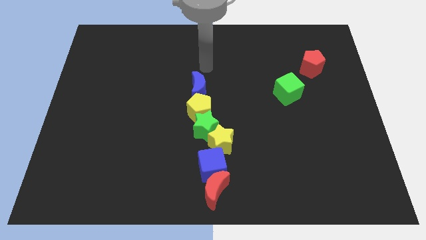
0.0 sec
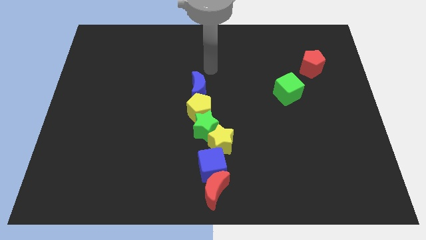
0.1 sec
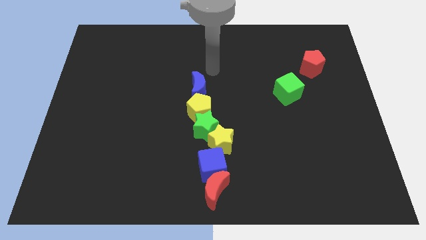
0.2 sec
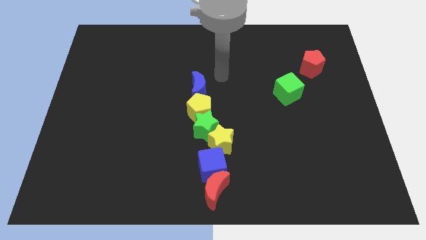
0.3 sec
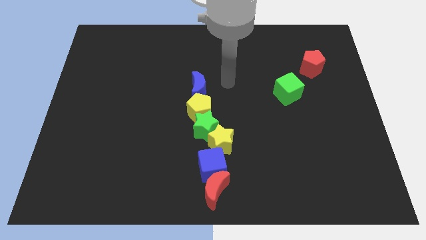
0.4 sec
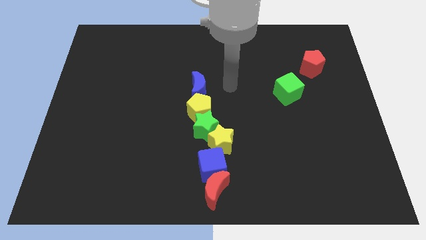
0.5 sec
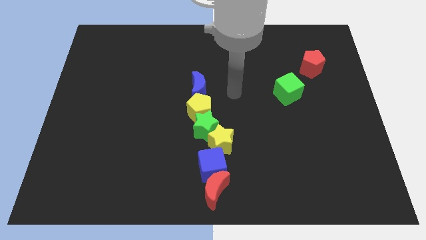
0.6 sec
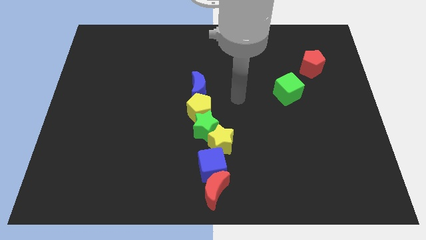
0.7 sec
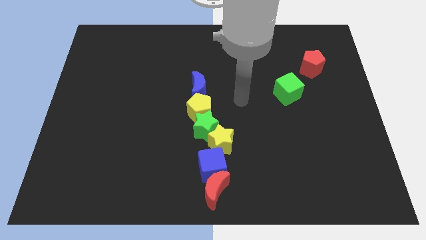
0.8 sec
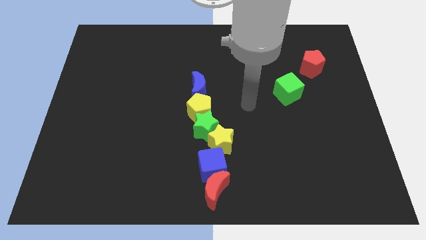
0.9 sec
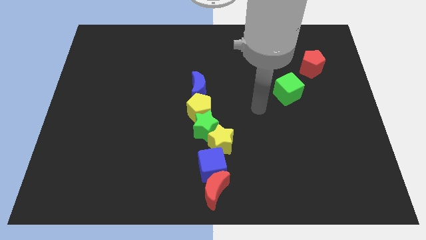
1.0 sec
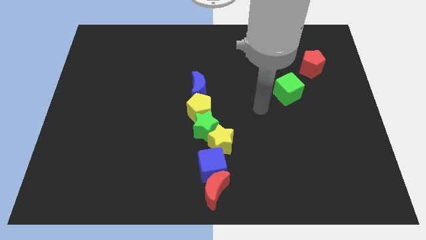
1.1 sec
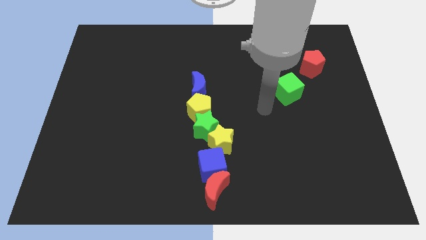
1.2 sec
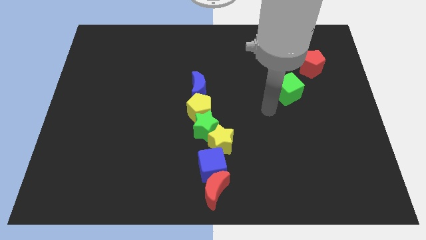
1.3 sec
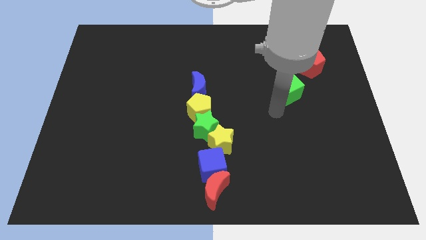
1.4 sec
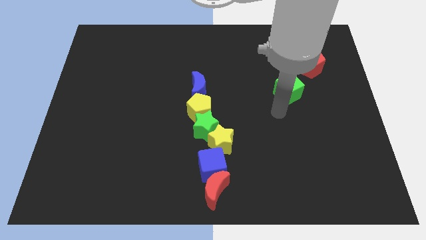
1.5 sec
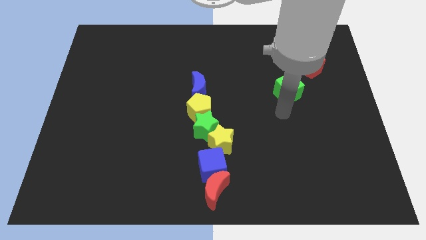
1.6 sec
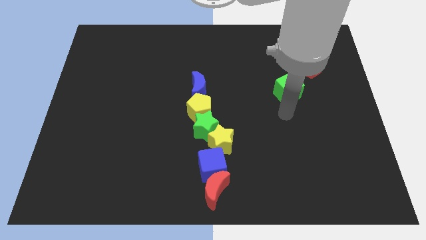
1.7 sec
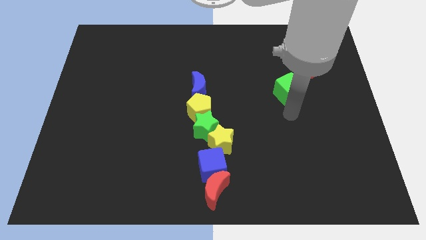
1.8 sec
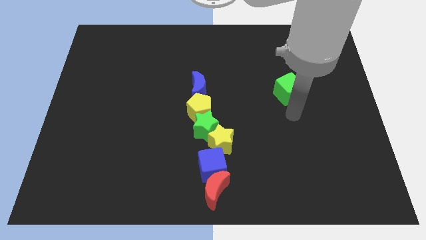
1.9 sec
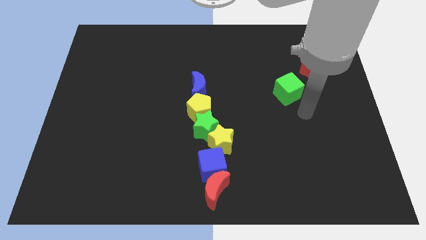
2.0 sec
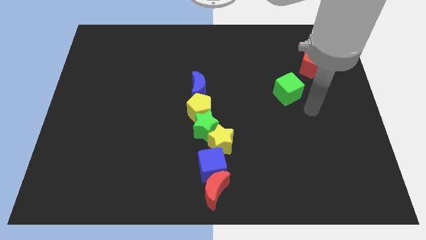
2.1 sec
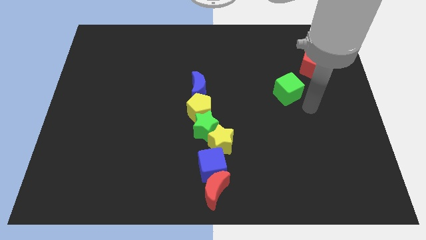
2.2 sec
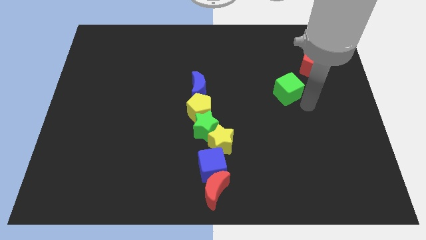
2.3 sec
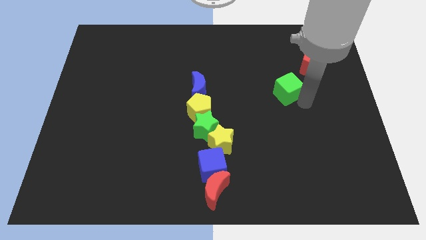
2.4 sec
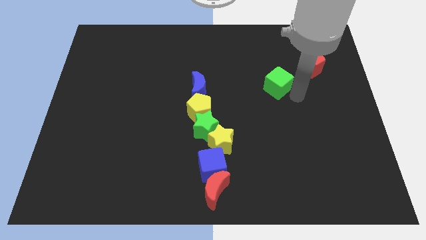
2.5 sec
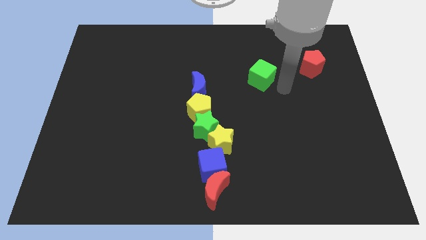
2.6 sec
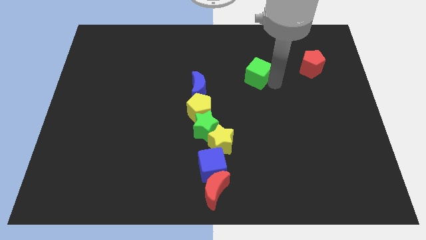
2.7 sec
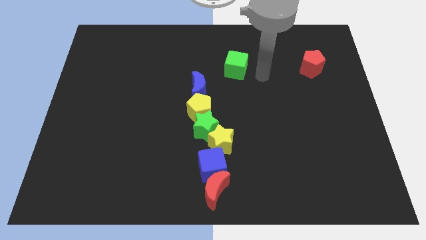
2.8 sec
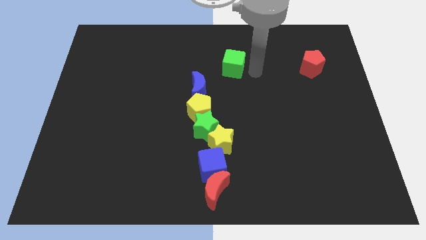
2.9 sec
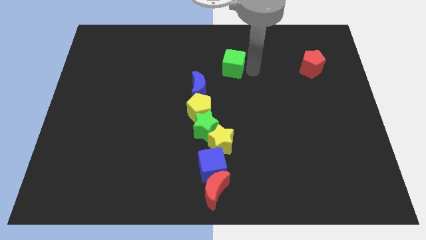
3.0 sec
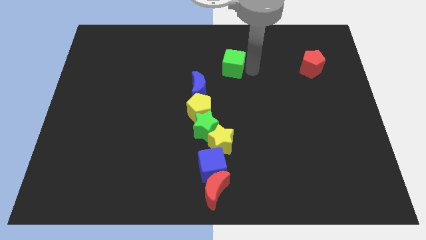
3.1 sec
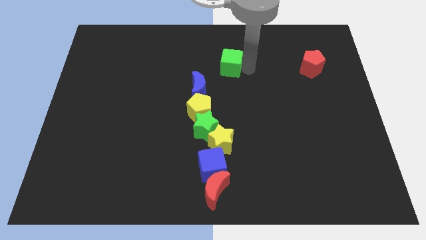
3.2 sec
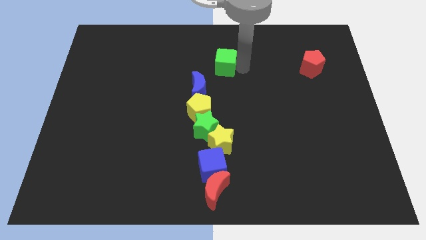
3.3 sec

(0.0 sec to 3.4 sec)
push the green cube to the top right of the blue crescent

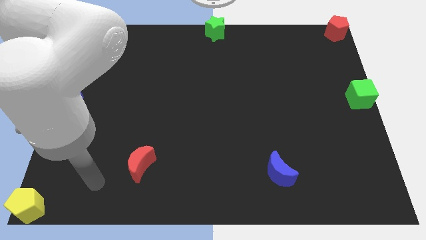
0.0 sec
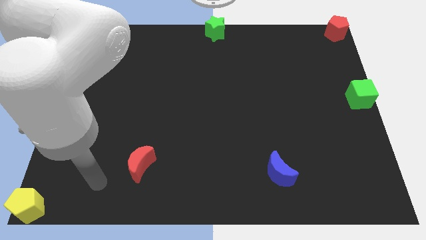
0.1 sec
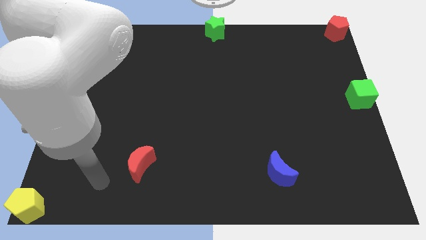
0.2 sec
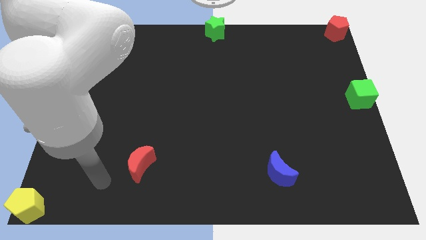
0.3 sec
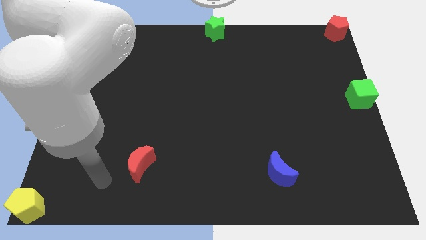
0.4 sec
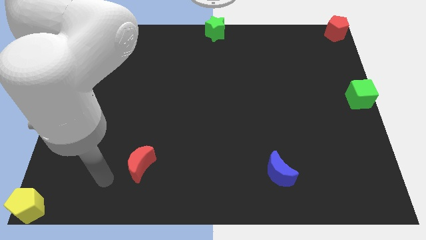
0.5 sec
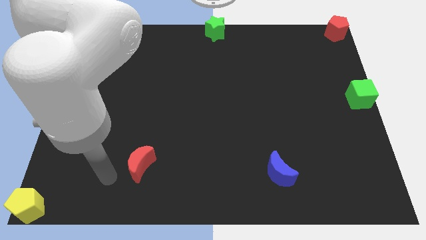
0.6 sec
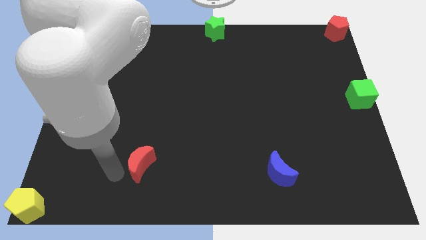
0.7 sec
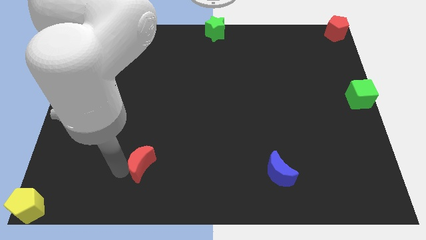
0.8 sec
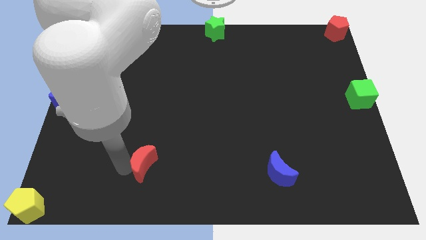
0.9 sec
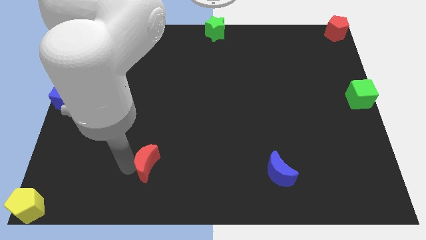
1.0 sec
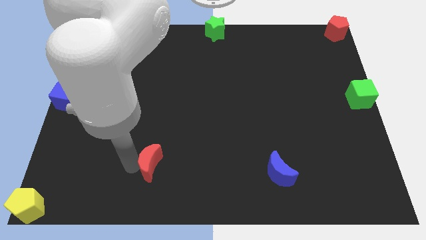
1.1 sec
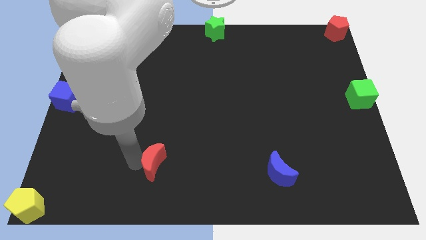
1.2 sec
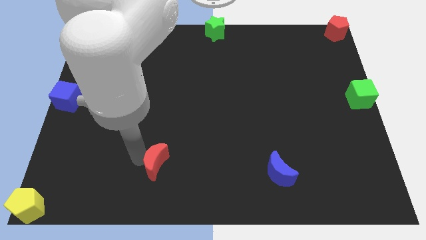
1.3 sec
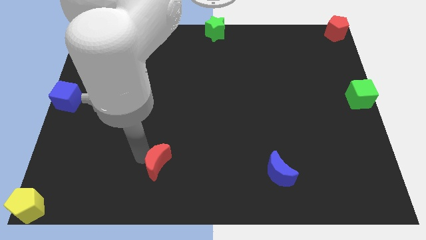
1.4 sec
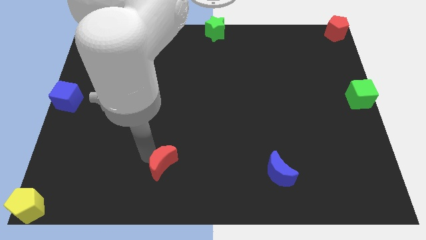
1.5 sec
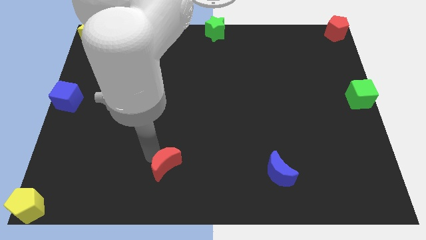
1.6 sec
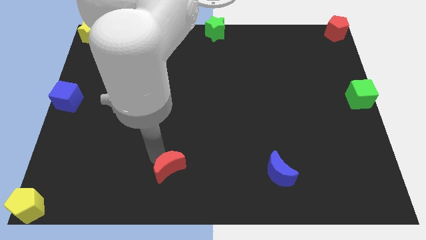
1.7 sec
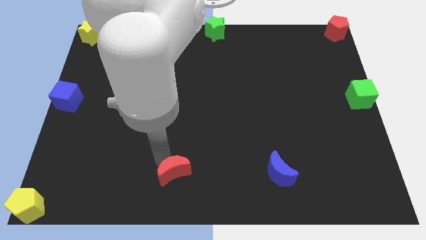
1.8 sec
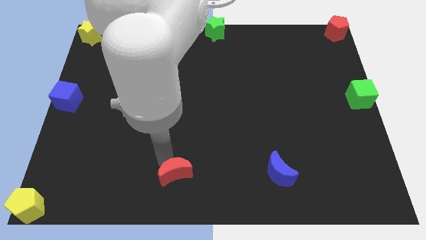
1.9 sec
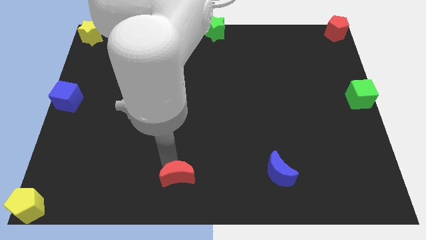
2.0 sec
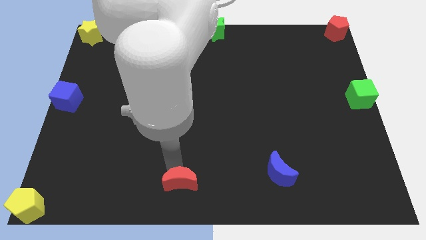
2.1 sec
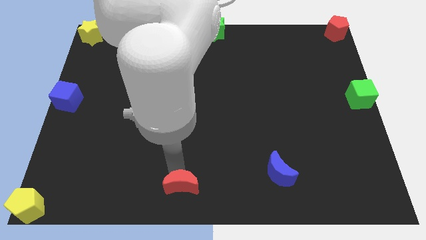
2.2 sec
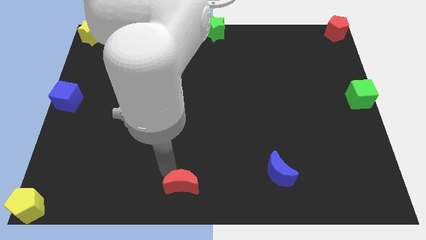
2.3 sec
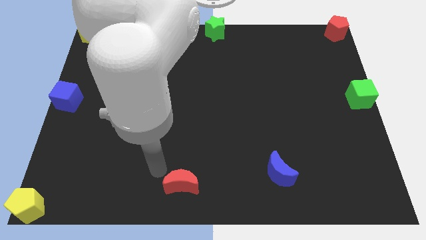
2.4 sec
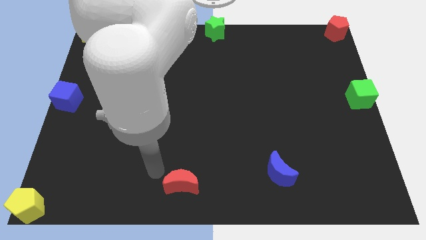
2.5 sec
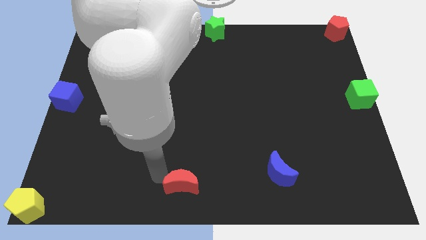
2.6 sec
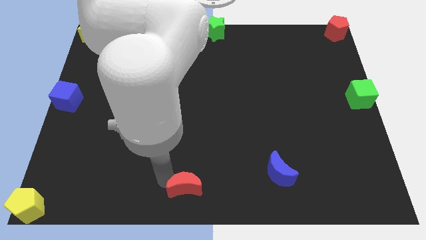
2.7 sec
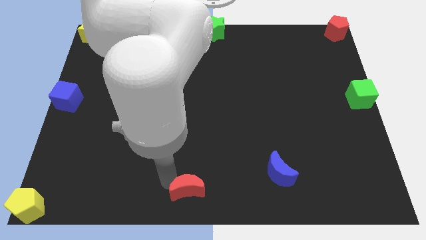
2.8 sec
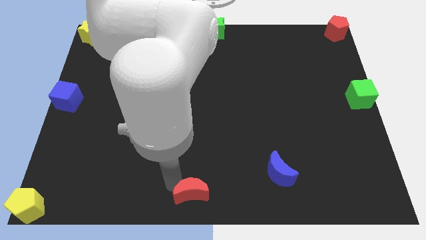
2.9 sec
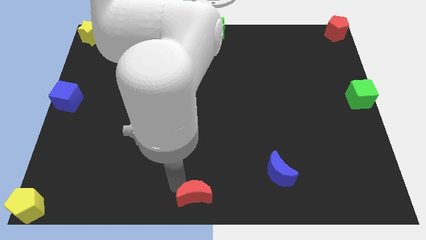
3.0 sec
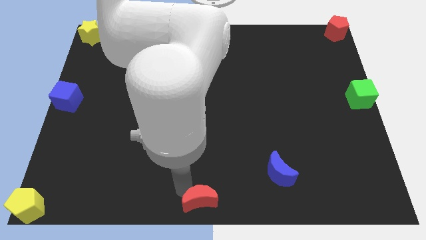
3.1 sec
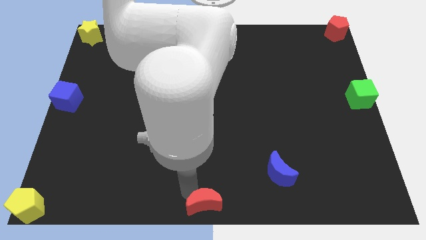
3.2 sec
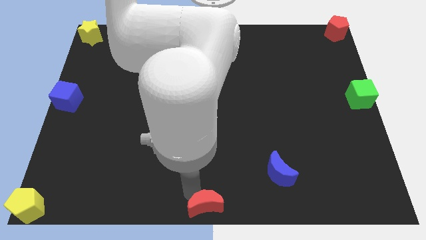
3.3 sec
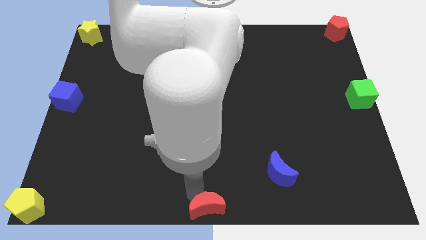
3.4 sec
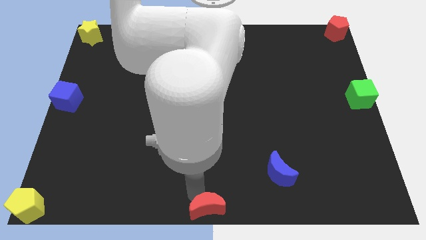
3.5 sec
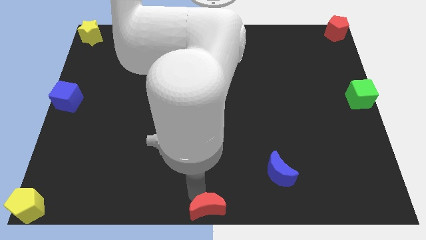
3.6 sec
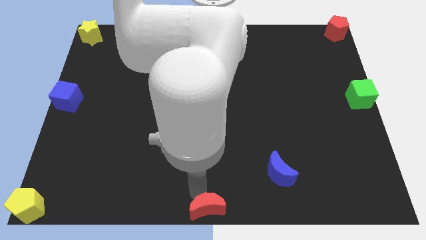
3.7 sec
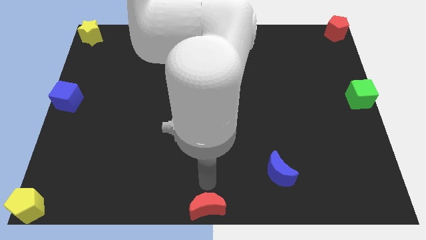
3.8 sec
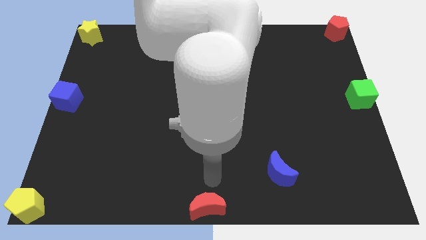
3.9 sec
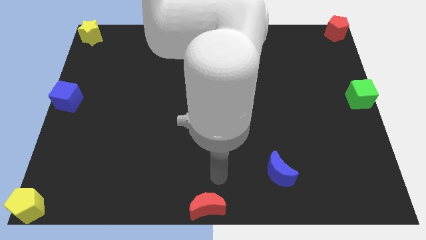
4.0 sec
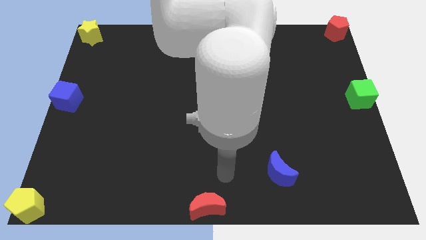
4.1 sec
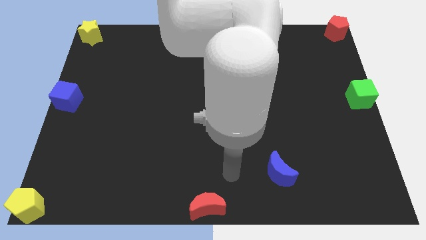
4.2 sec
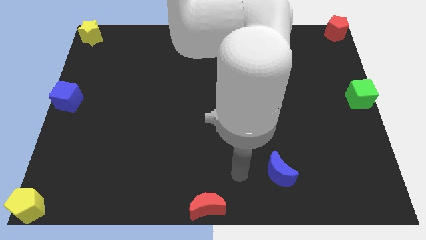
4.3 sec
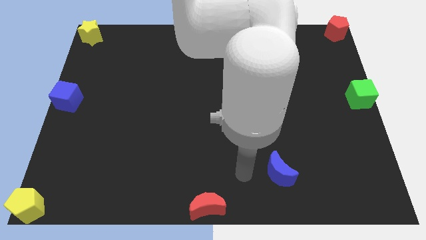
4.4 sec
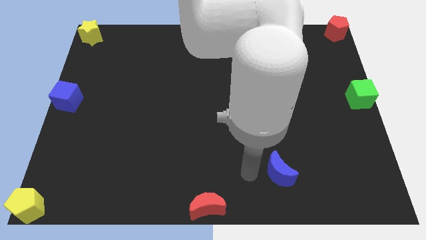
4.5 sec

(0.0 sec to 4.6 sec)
place the red crescent towsards the bottom center of the board

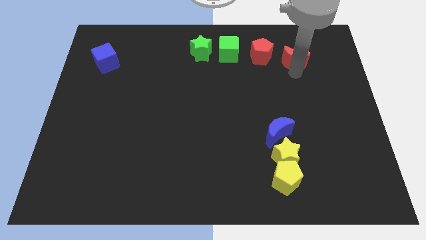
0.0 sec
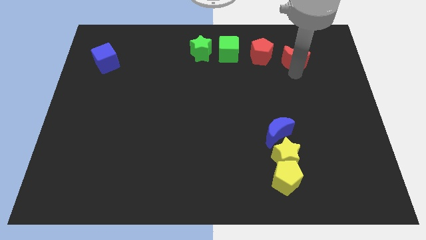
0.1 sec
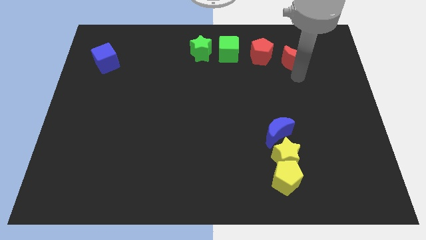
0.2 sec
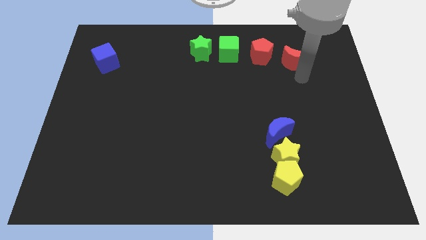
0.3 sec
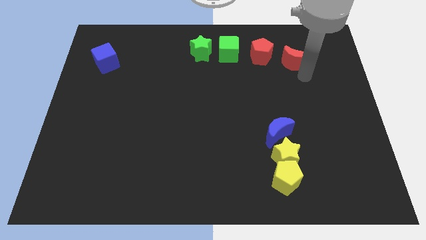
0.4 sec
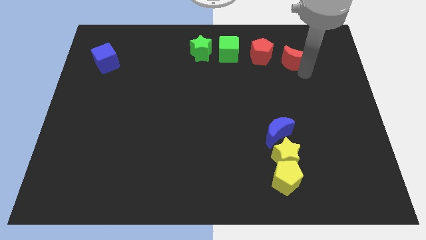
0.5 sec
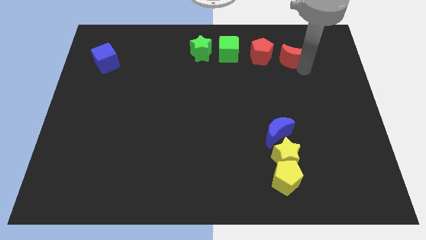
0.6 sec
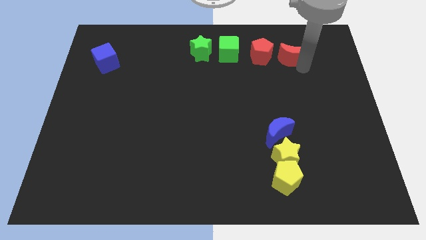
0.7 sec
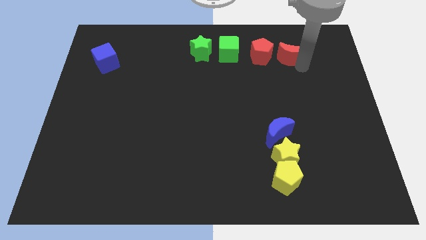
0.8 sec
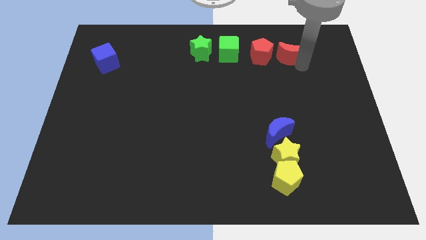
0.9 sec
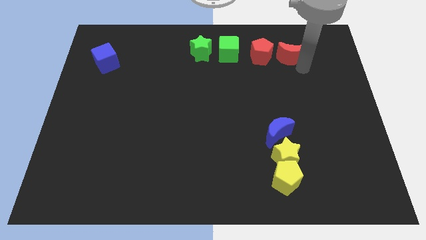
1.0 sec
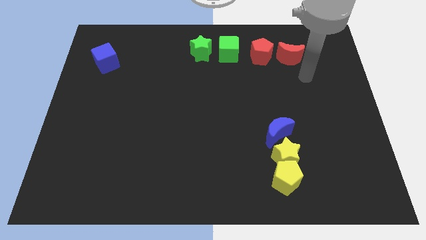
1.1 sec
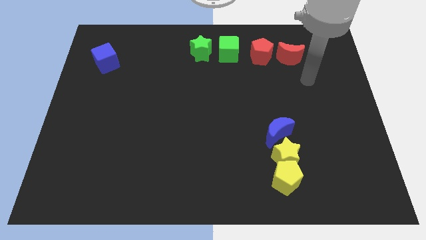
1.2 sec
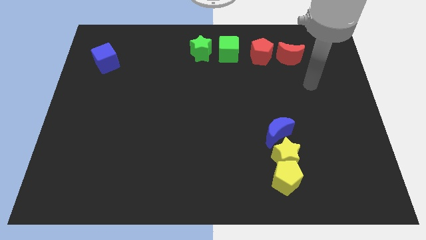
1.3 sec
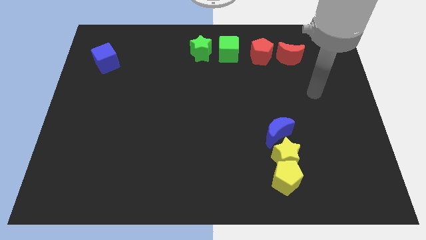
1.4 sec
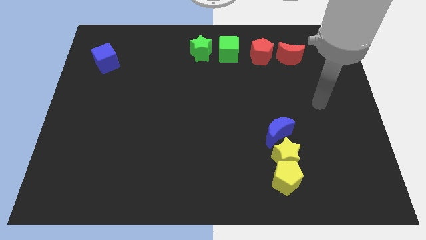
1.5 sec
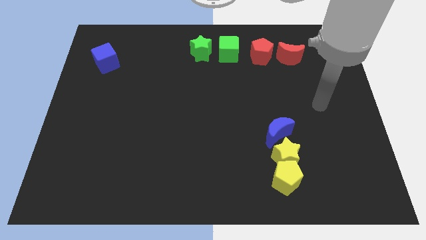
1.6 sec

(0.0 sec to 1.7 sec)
place red moon towards the red pentagon
